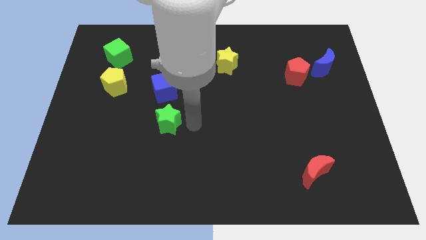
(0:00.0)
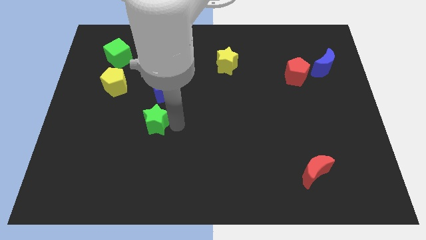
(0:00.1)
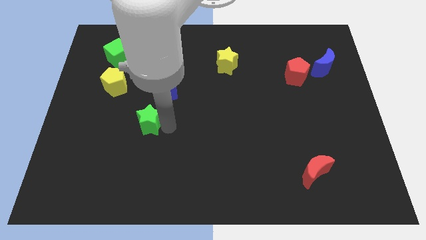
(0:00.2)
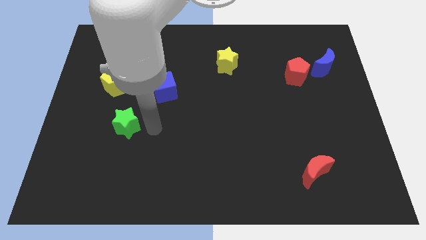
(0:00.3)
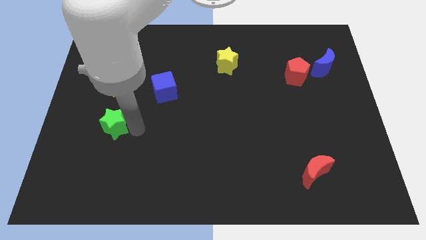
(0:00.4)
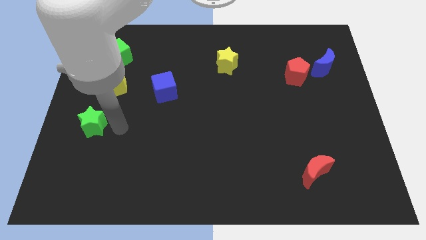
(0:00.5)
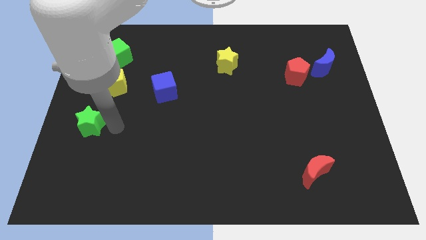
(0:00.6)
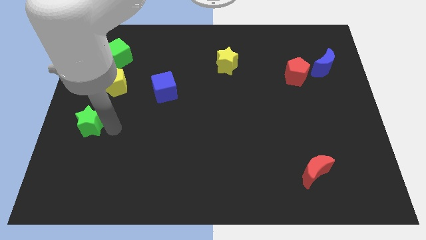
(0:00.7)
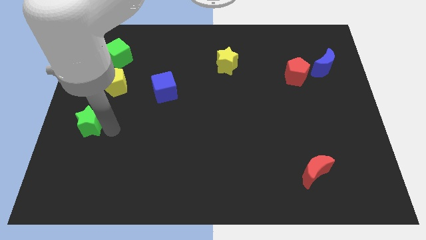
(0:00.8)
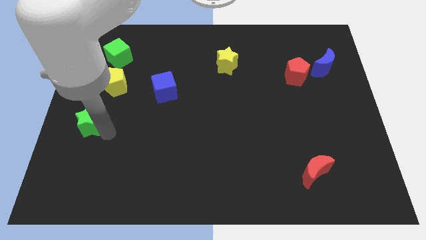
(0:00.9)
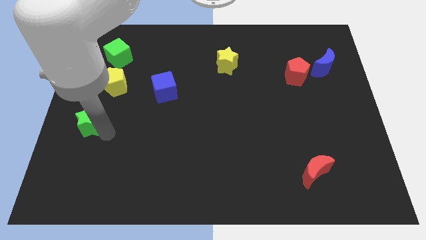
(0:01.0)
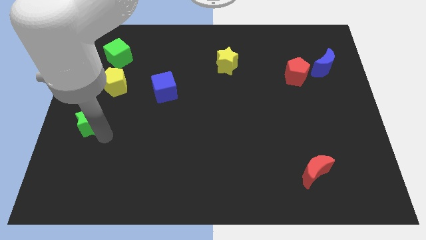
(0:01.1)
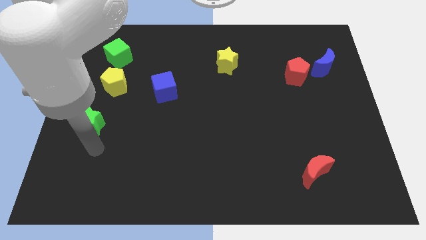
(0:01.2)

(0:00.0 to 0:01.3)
push the green star towards the center left of the board

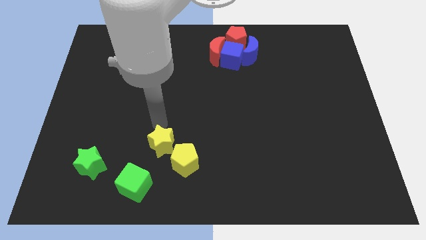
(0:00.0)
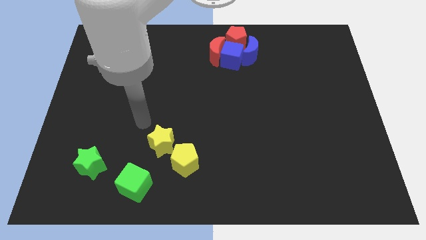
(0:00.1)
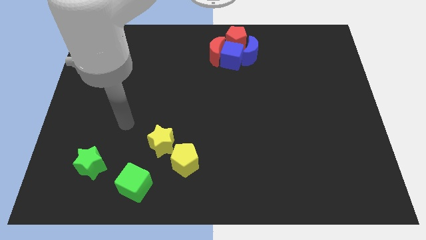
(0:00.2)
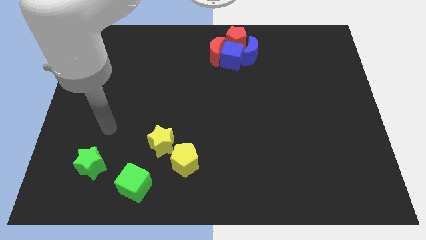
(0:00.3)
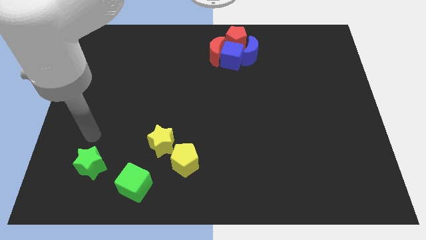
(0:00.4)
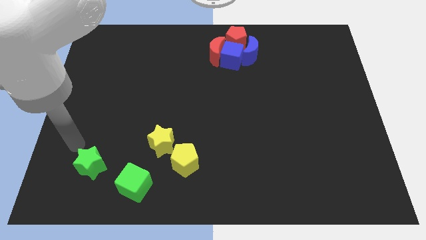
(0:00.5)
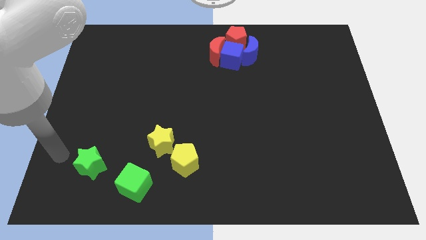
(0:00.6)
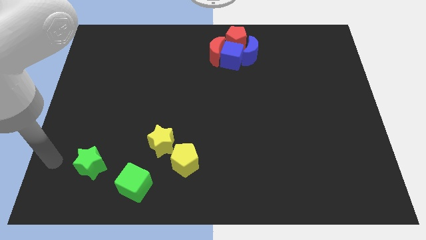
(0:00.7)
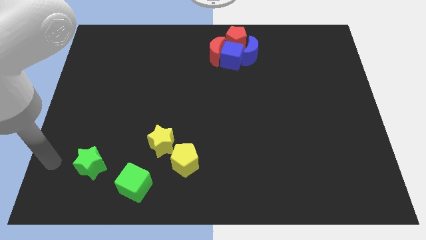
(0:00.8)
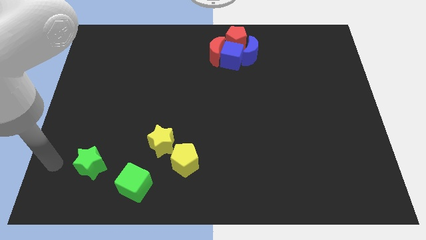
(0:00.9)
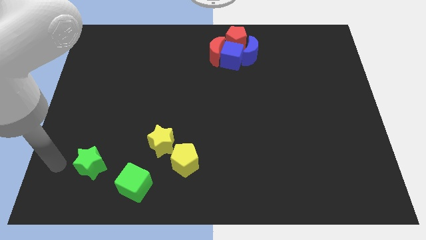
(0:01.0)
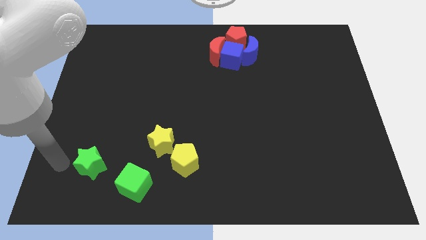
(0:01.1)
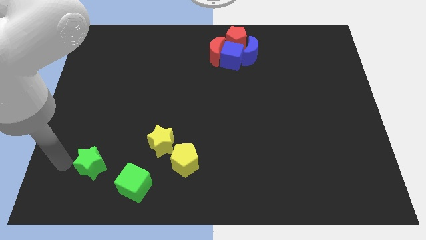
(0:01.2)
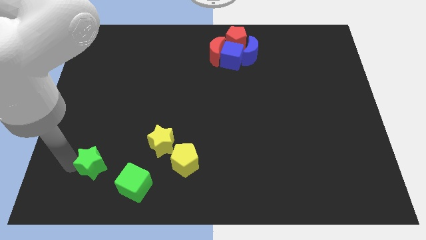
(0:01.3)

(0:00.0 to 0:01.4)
move away from yellow star

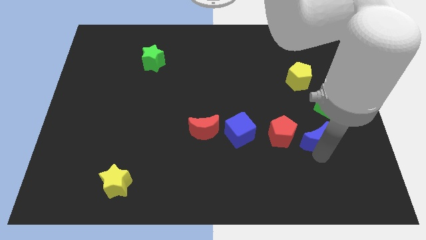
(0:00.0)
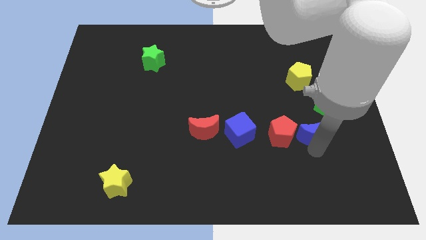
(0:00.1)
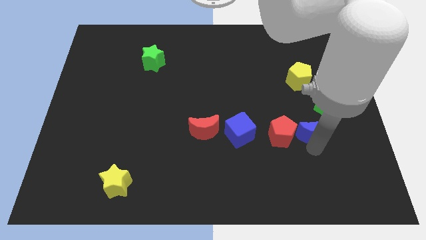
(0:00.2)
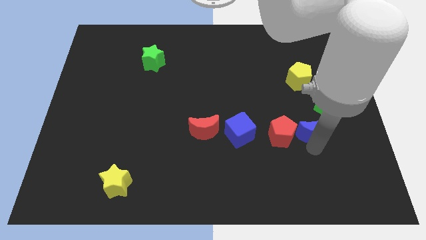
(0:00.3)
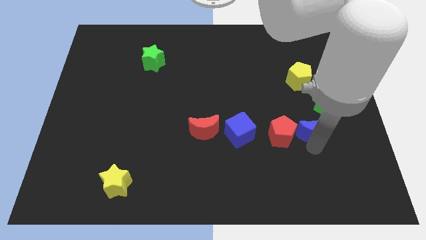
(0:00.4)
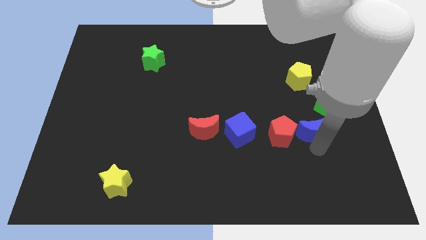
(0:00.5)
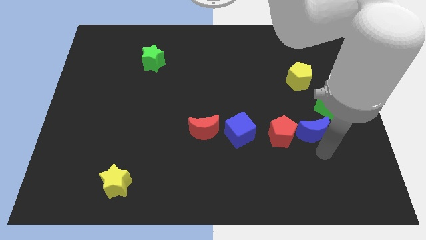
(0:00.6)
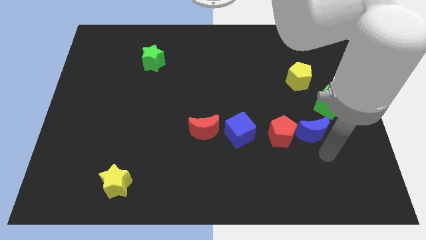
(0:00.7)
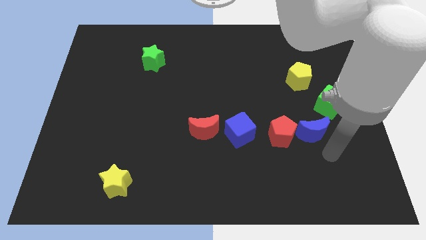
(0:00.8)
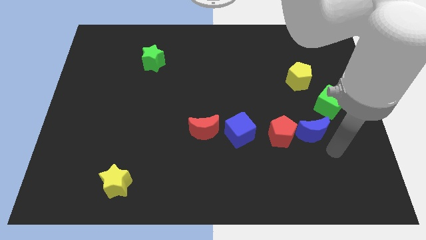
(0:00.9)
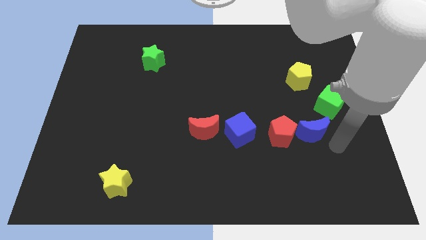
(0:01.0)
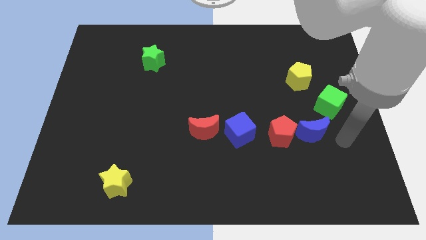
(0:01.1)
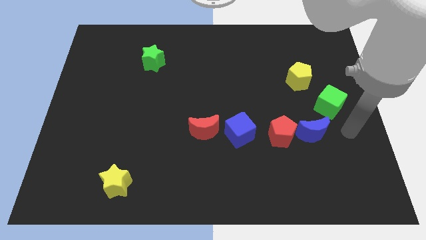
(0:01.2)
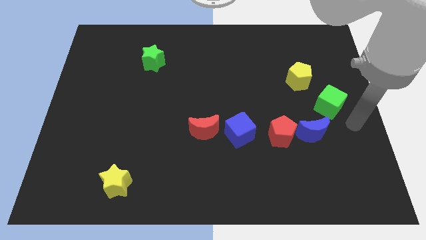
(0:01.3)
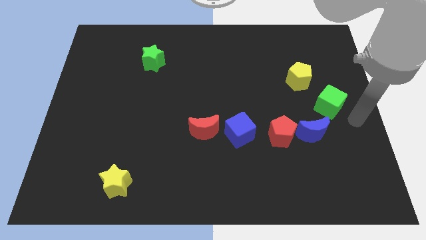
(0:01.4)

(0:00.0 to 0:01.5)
push the blue moon up slightly

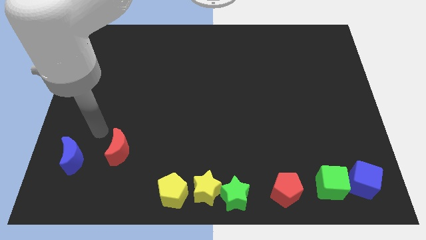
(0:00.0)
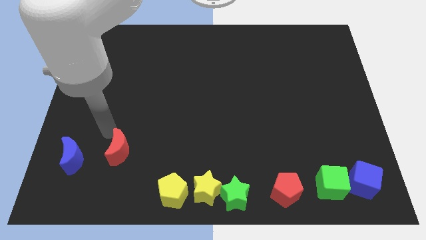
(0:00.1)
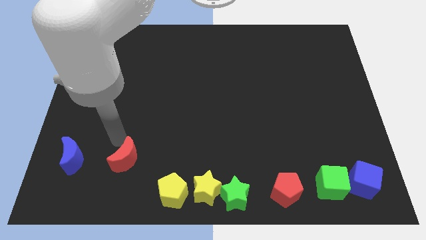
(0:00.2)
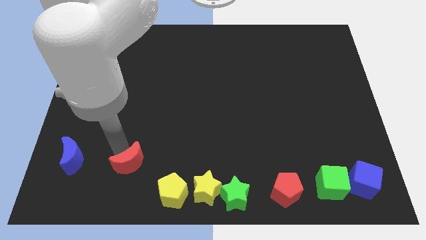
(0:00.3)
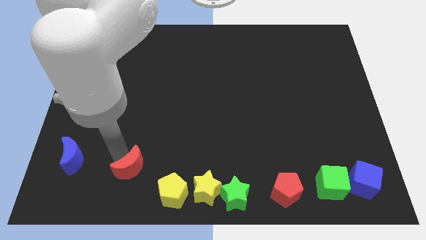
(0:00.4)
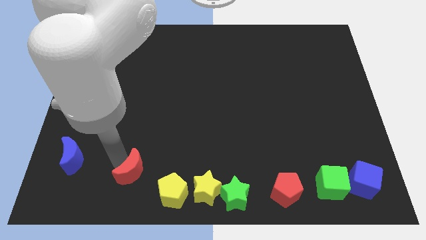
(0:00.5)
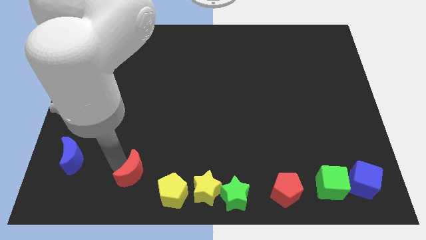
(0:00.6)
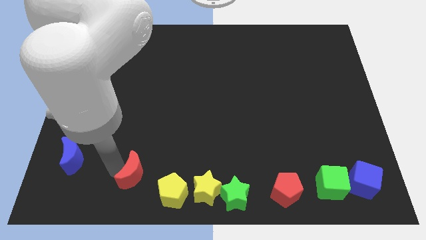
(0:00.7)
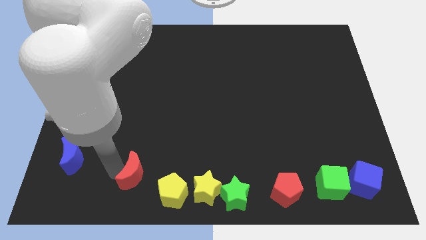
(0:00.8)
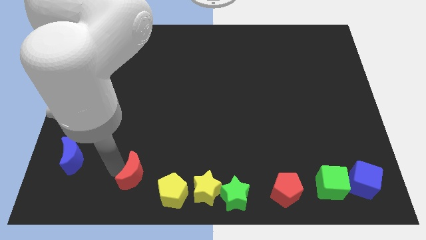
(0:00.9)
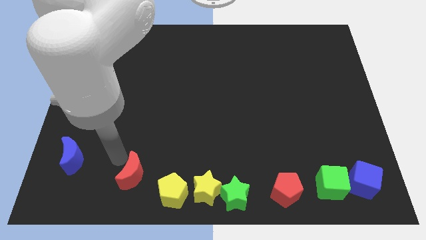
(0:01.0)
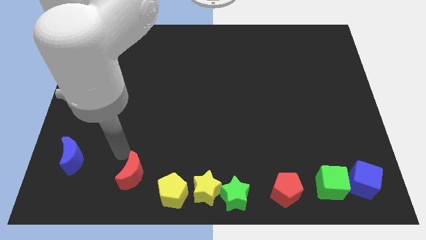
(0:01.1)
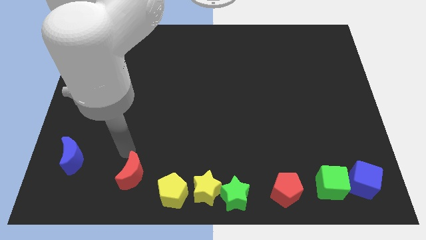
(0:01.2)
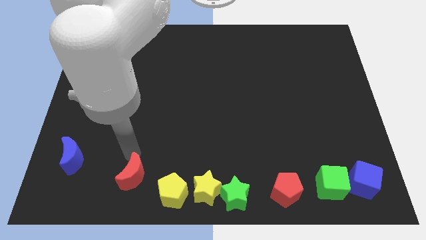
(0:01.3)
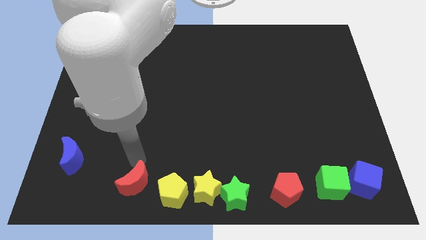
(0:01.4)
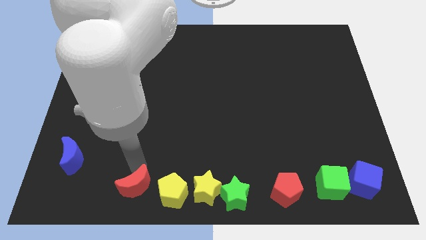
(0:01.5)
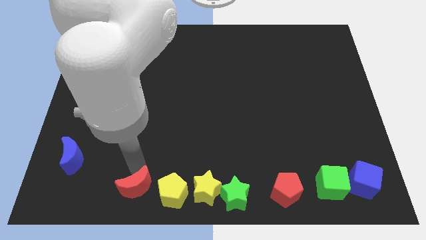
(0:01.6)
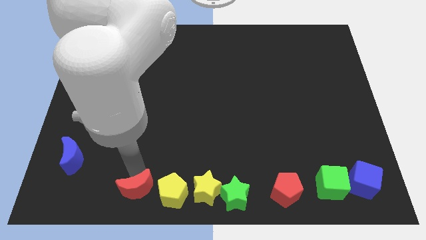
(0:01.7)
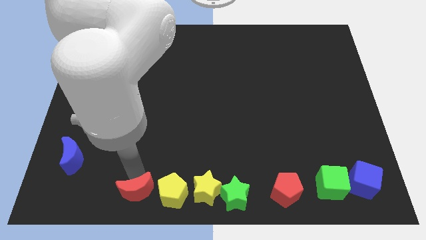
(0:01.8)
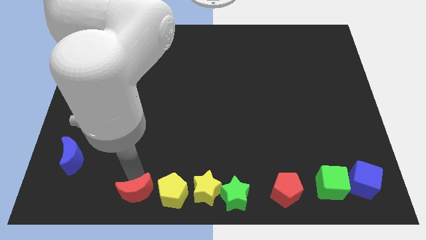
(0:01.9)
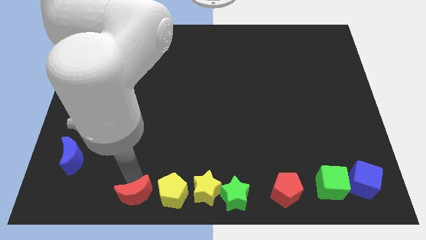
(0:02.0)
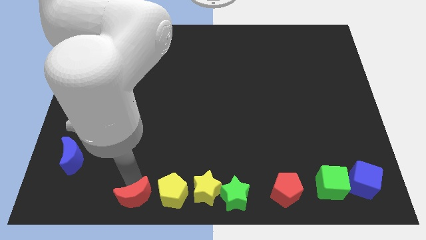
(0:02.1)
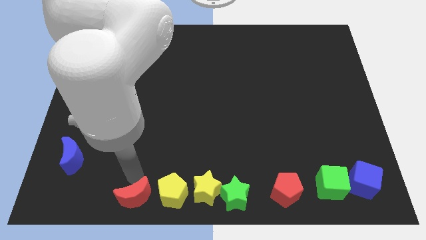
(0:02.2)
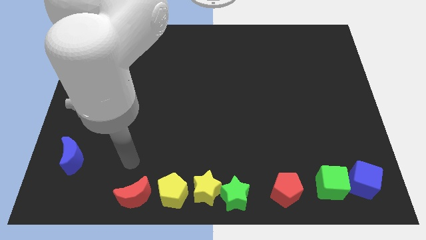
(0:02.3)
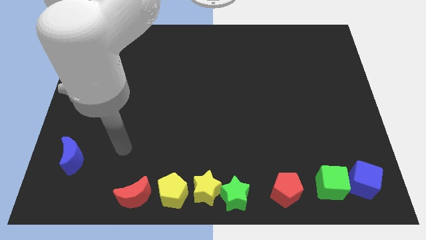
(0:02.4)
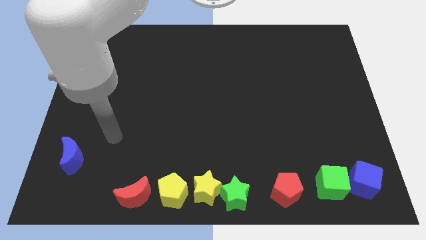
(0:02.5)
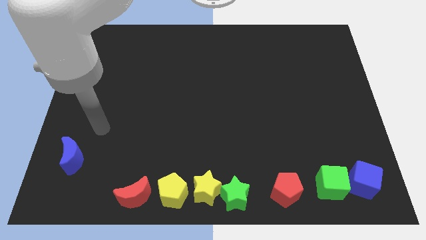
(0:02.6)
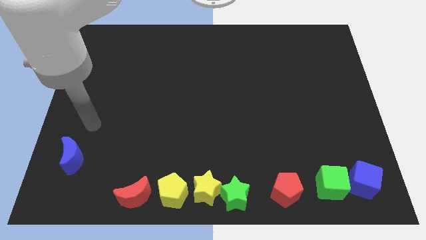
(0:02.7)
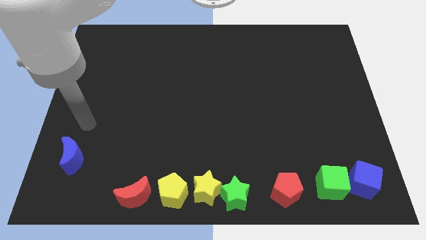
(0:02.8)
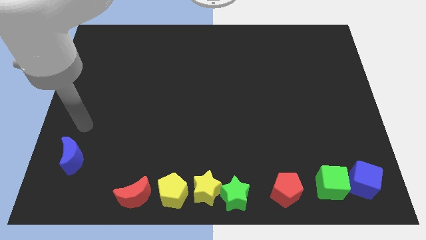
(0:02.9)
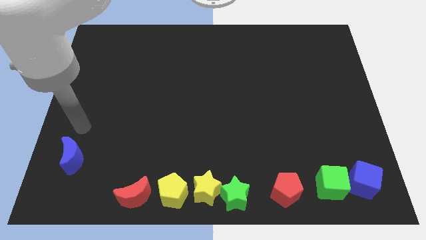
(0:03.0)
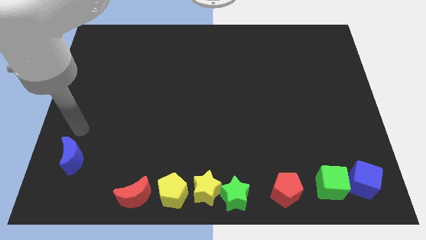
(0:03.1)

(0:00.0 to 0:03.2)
place the red moon to the left of yellow pentagon

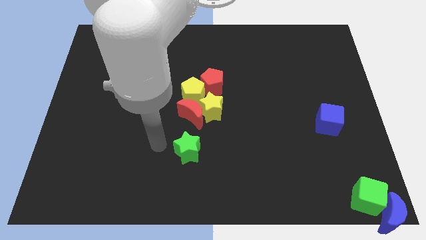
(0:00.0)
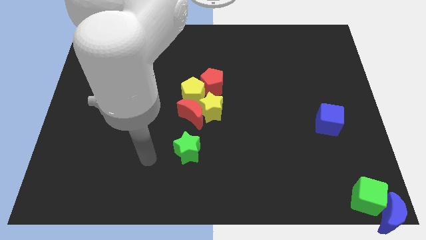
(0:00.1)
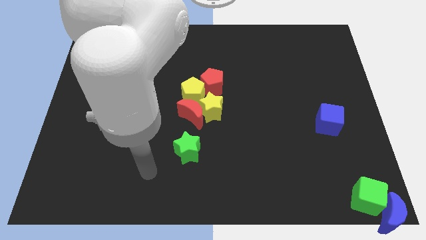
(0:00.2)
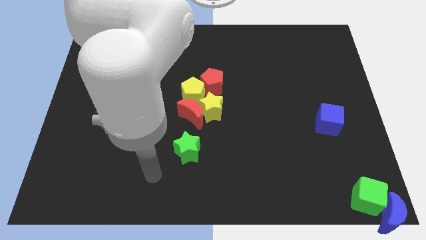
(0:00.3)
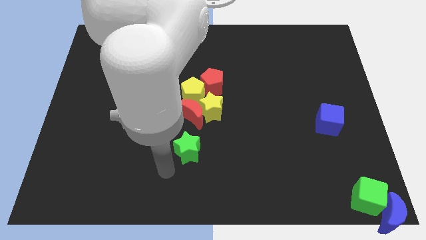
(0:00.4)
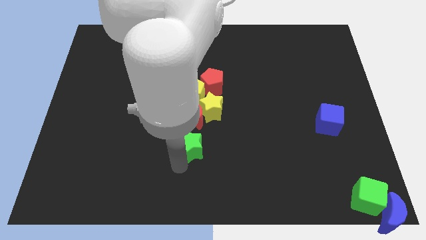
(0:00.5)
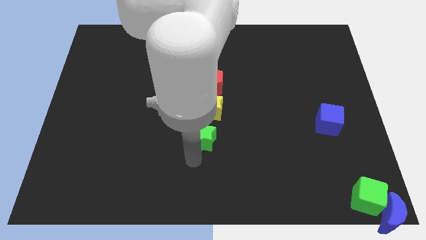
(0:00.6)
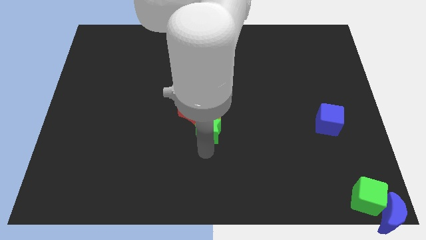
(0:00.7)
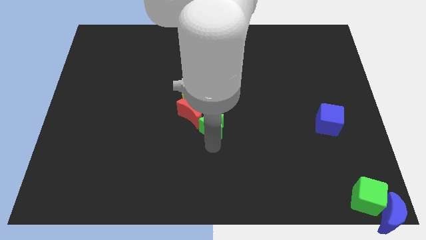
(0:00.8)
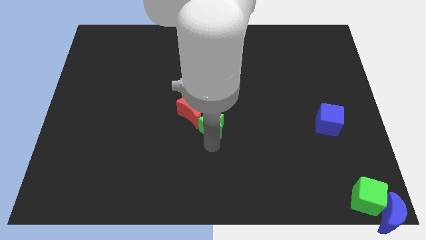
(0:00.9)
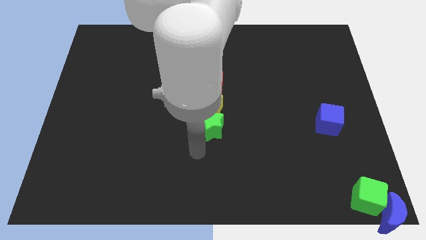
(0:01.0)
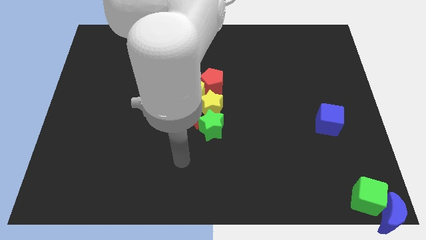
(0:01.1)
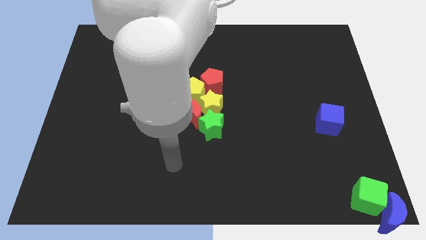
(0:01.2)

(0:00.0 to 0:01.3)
put the green star at the bottom of the yellow star

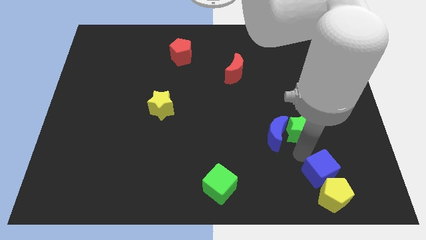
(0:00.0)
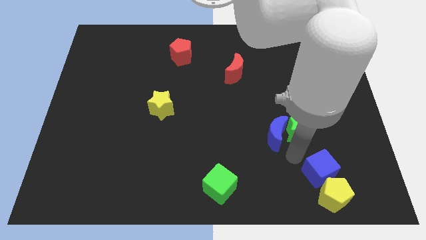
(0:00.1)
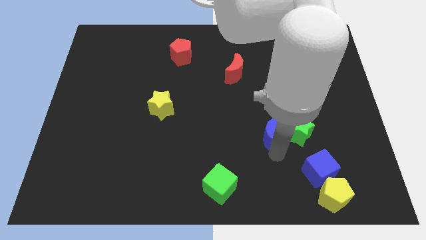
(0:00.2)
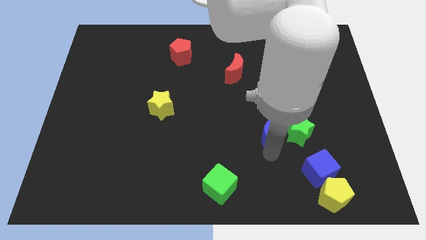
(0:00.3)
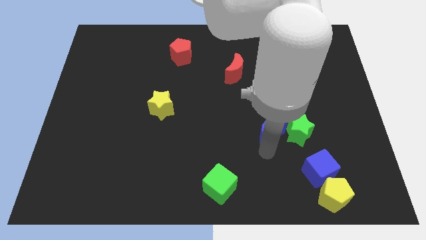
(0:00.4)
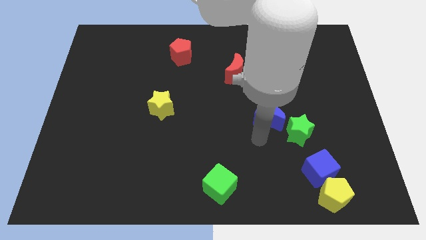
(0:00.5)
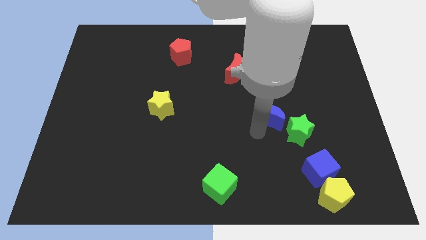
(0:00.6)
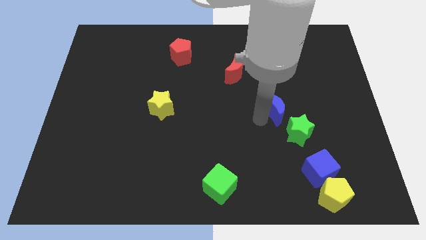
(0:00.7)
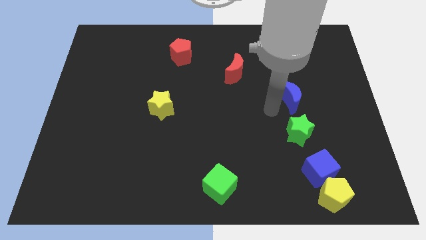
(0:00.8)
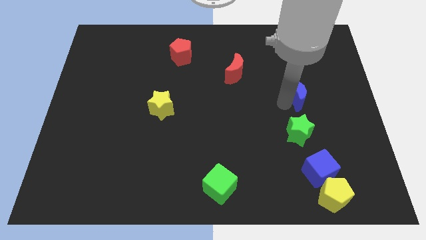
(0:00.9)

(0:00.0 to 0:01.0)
place blue moon to the top of green star
